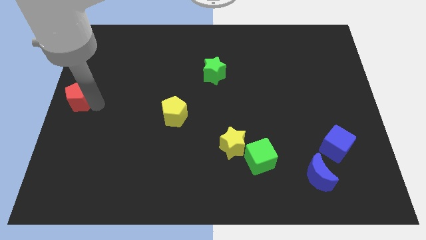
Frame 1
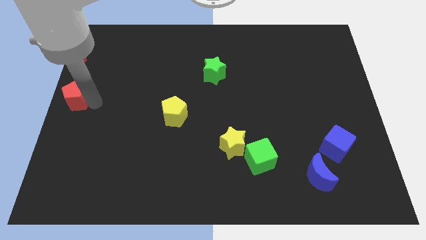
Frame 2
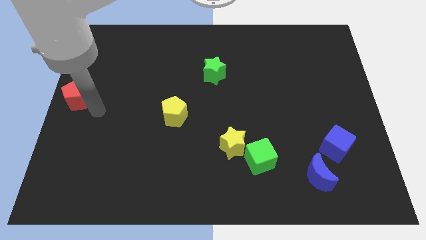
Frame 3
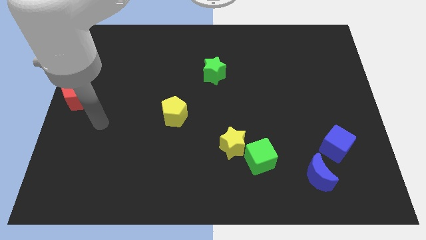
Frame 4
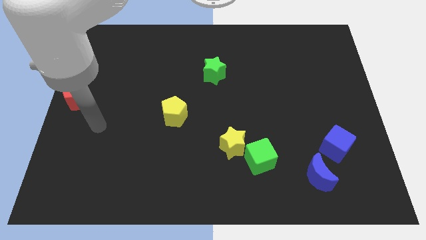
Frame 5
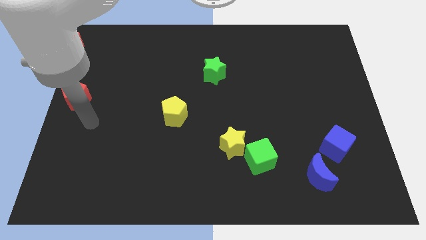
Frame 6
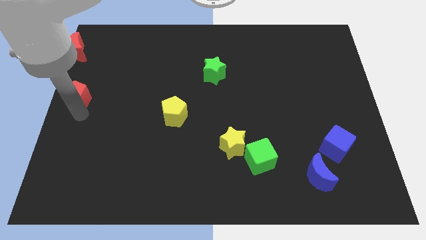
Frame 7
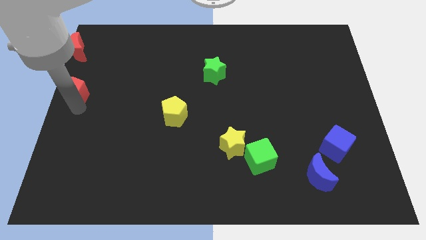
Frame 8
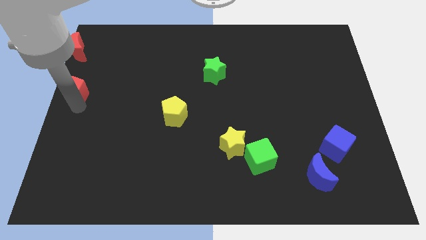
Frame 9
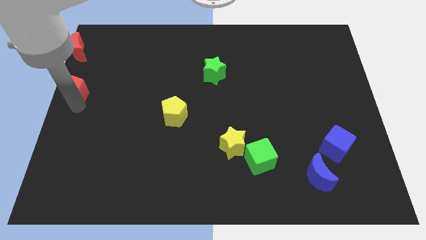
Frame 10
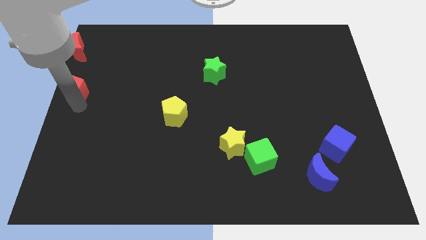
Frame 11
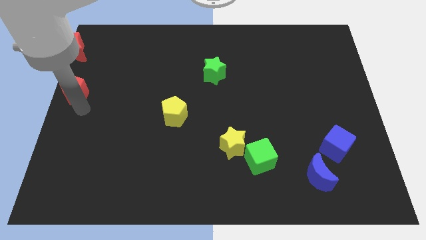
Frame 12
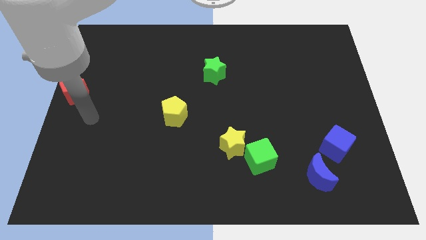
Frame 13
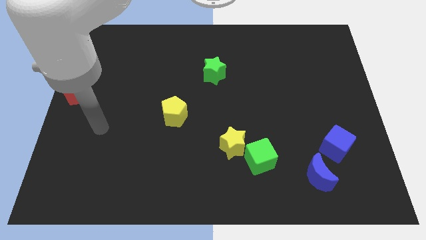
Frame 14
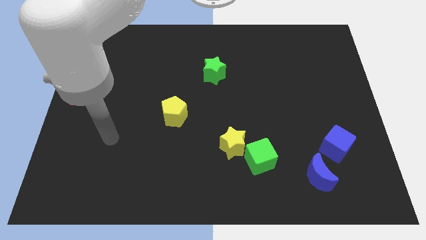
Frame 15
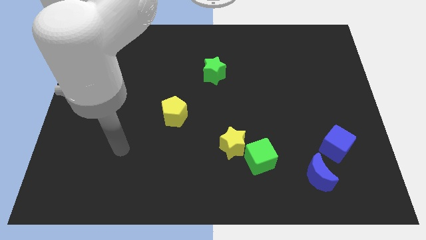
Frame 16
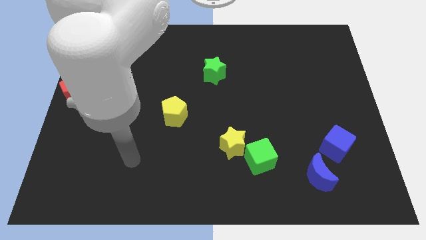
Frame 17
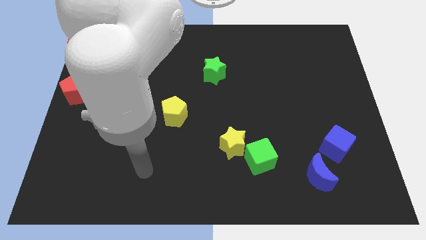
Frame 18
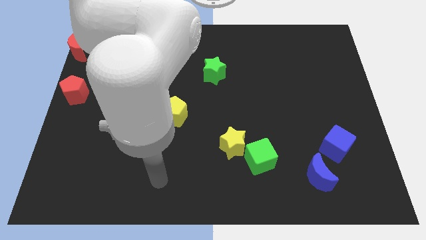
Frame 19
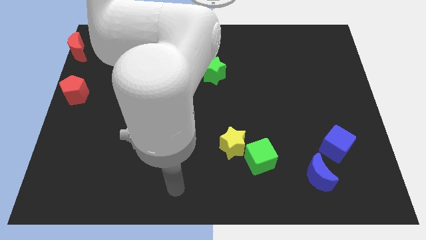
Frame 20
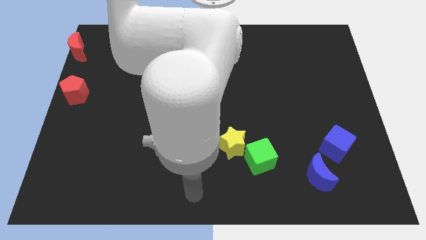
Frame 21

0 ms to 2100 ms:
put the red pentagon below the red moon

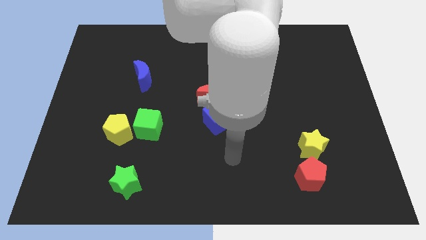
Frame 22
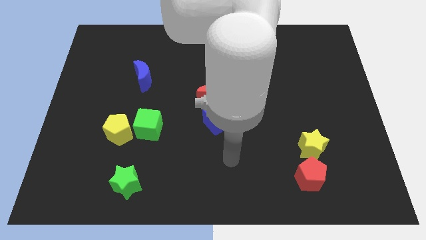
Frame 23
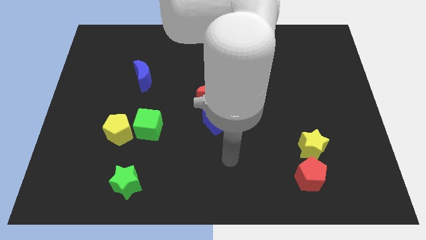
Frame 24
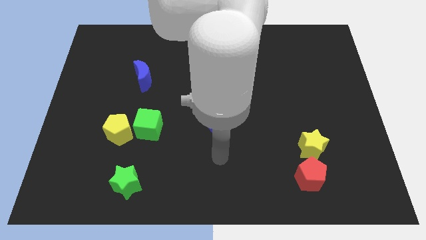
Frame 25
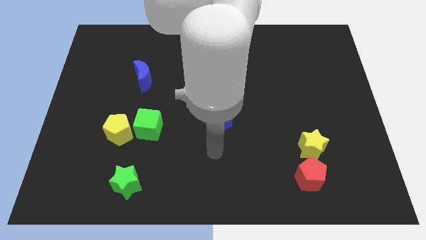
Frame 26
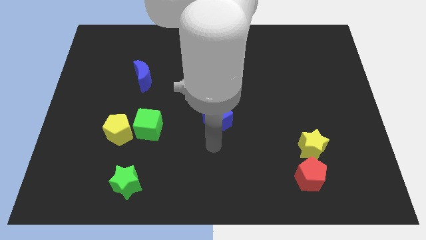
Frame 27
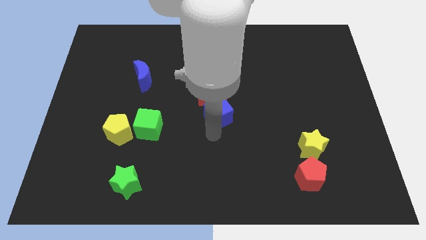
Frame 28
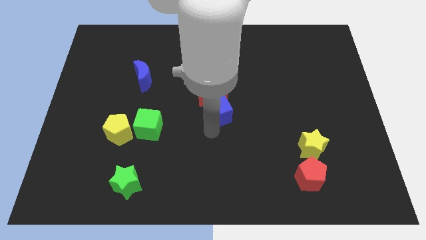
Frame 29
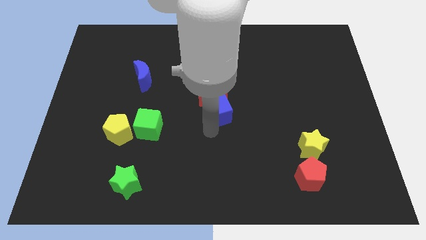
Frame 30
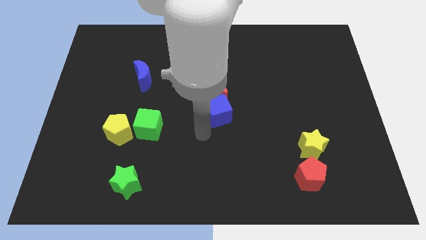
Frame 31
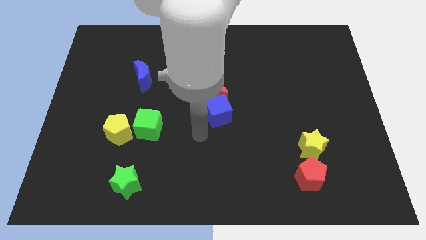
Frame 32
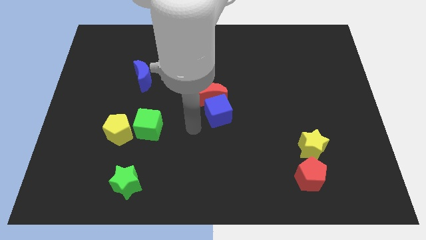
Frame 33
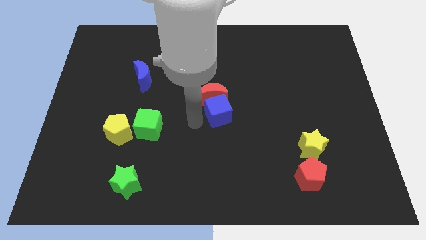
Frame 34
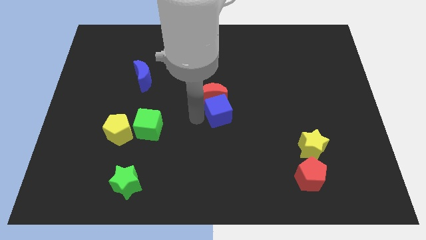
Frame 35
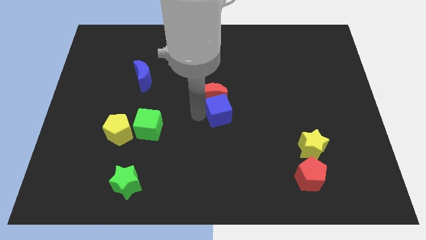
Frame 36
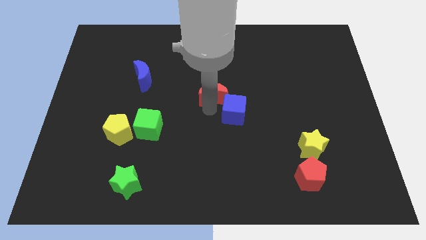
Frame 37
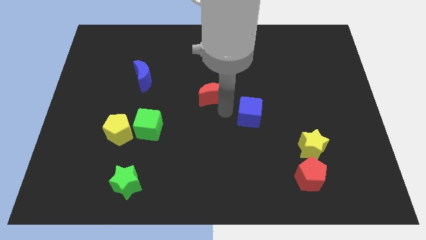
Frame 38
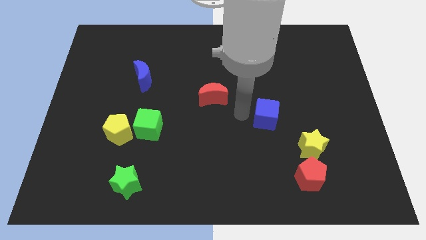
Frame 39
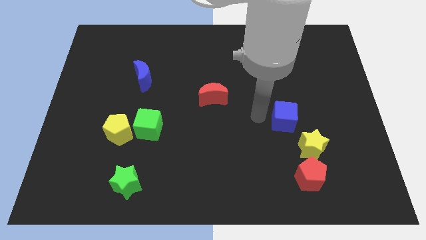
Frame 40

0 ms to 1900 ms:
push the blue cube away from the red moon

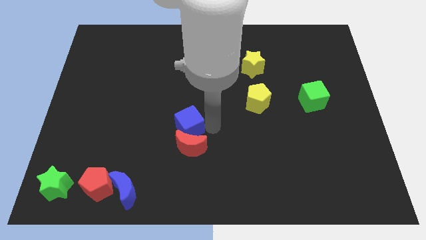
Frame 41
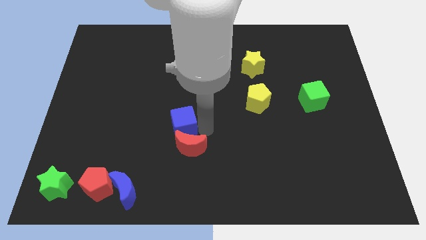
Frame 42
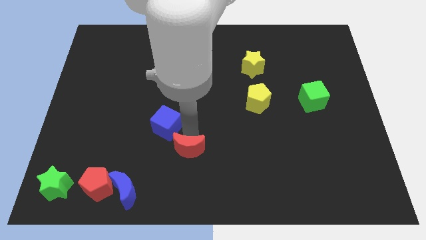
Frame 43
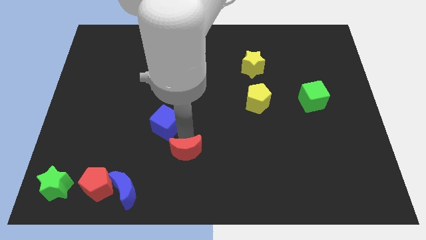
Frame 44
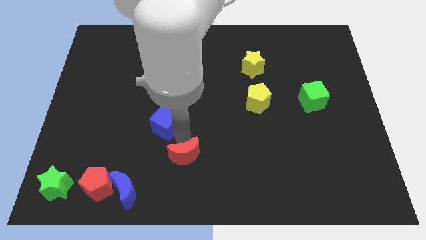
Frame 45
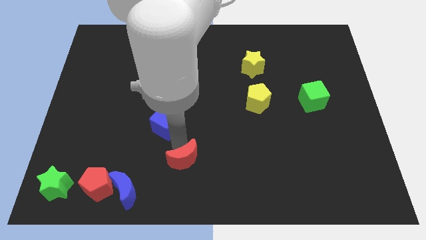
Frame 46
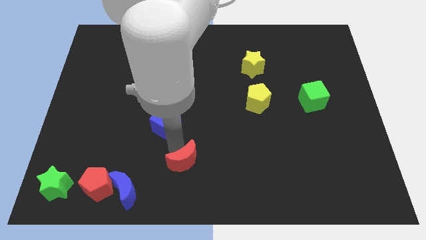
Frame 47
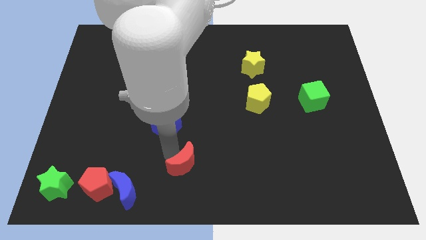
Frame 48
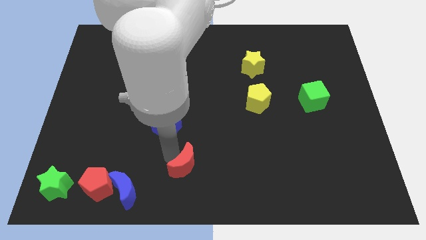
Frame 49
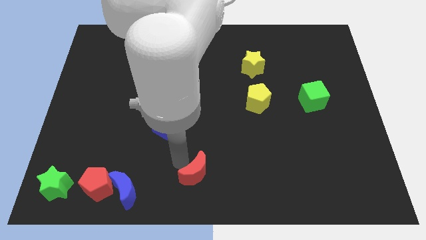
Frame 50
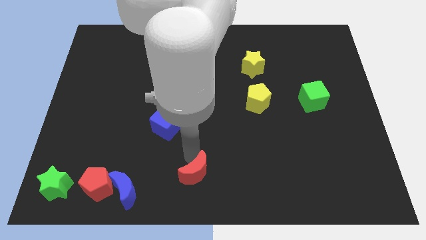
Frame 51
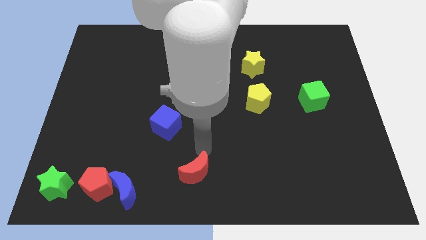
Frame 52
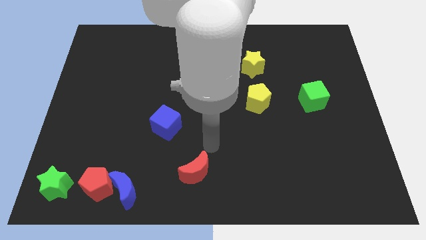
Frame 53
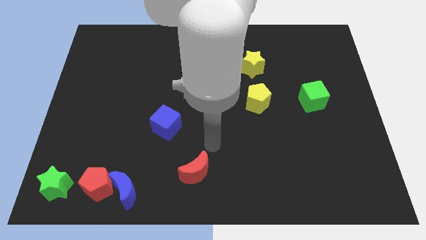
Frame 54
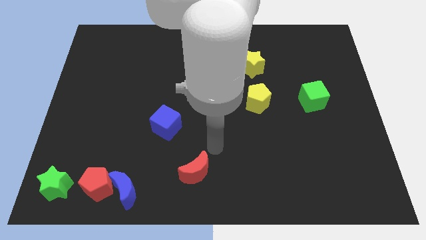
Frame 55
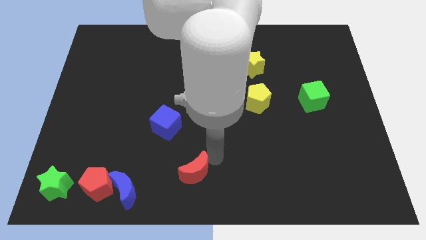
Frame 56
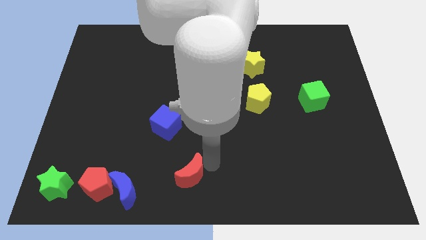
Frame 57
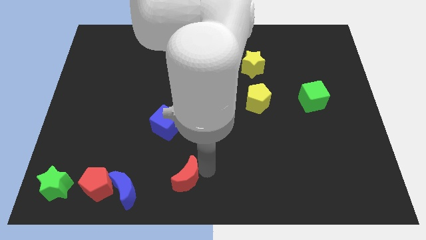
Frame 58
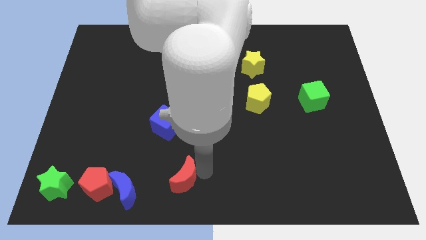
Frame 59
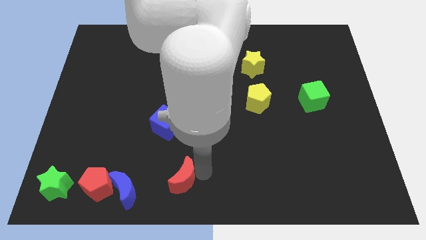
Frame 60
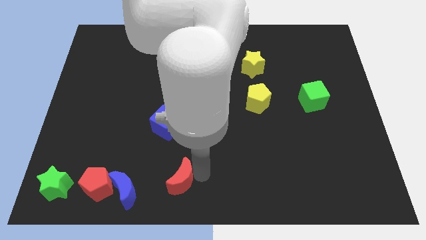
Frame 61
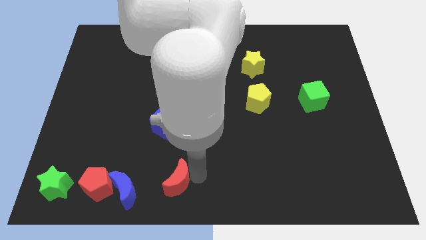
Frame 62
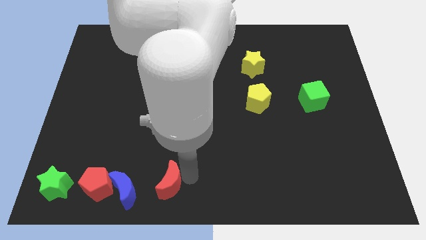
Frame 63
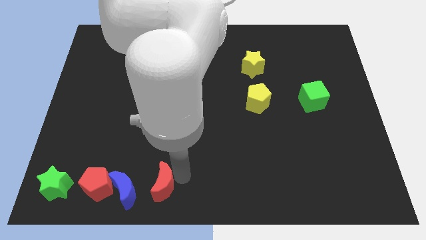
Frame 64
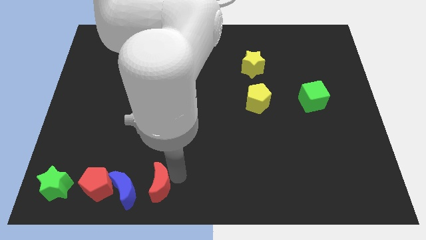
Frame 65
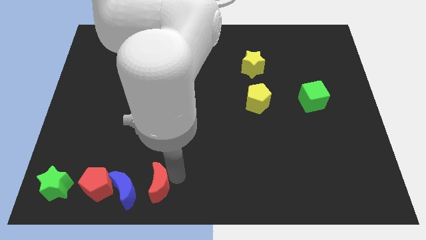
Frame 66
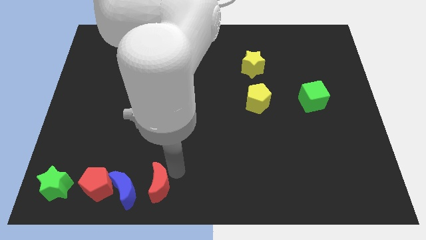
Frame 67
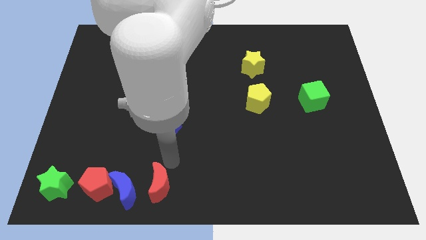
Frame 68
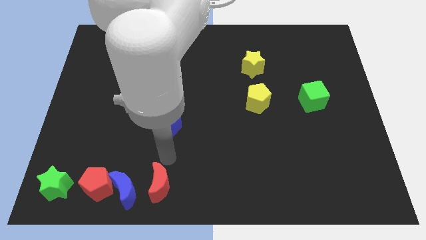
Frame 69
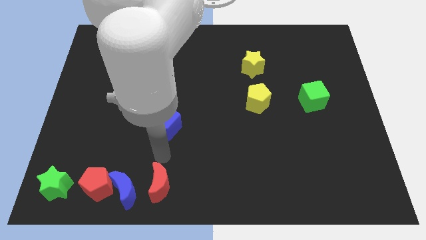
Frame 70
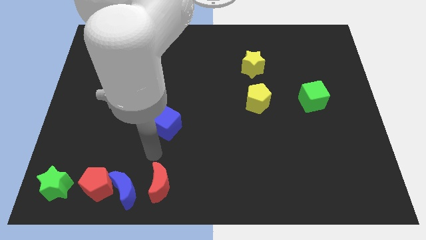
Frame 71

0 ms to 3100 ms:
push the red crescent right bottom center

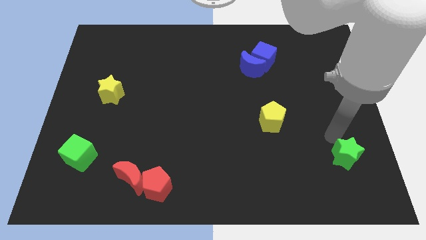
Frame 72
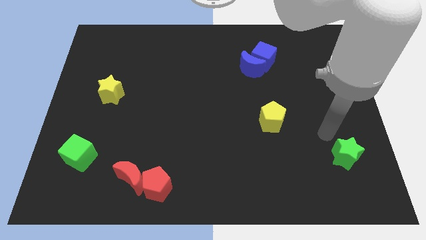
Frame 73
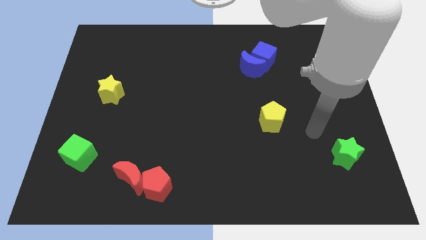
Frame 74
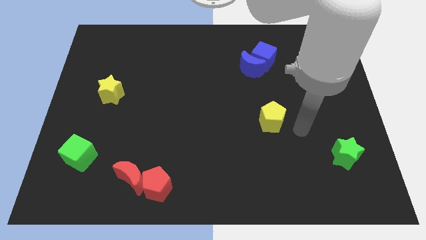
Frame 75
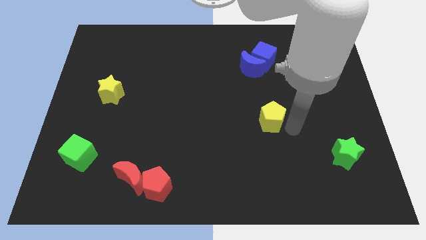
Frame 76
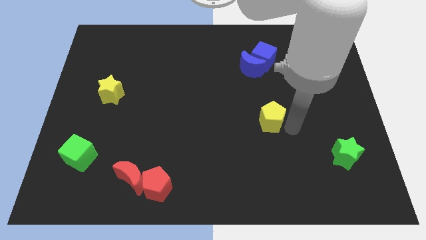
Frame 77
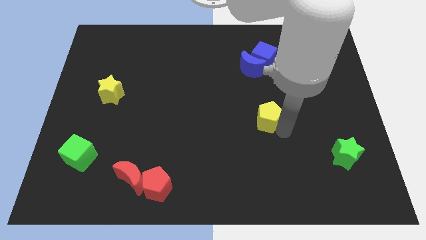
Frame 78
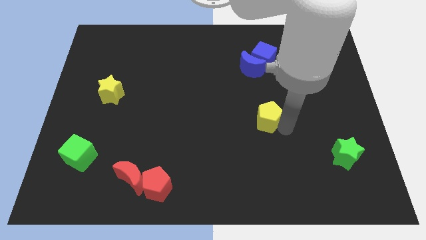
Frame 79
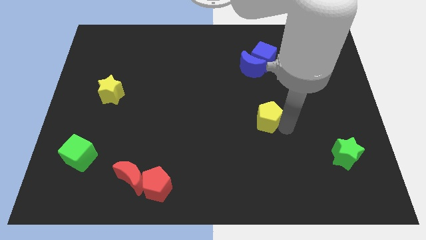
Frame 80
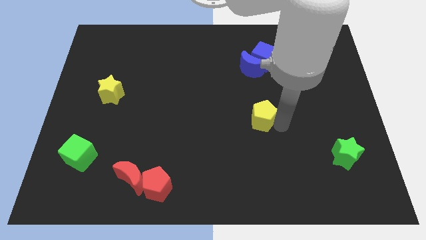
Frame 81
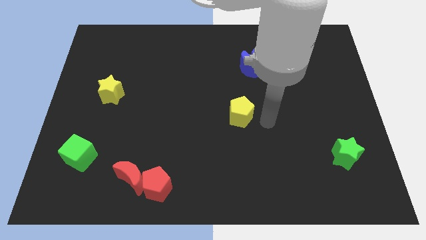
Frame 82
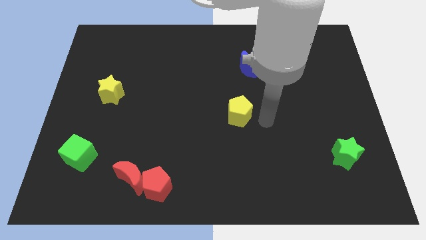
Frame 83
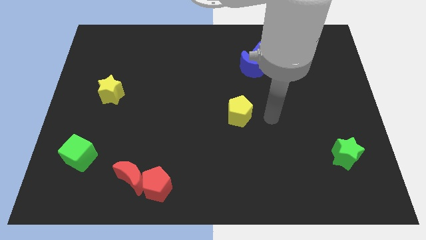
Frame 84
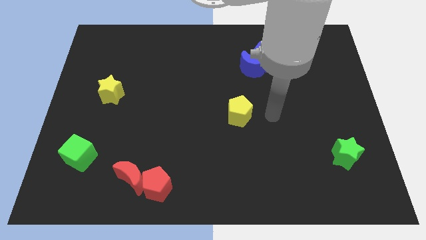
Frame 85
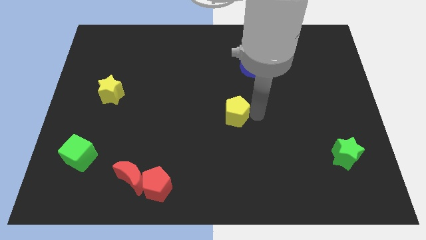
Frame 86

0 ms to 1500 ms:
move the yellow pentagon towards the left

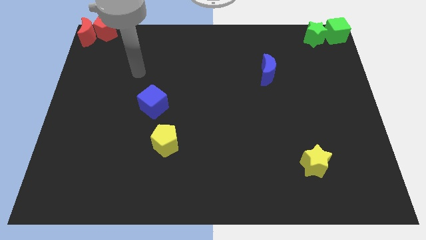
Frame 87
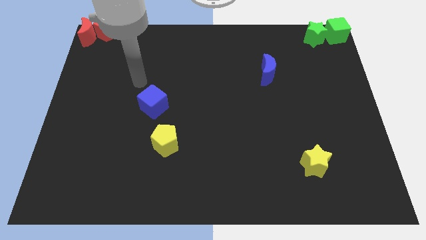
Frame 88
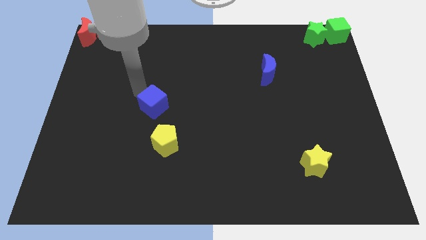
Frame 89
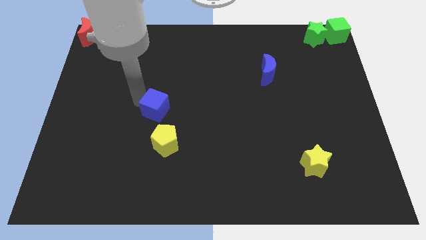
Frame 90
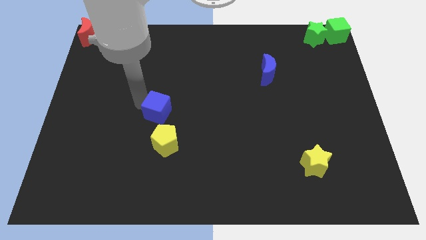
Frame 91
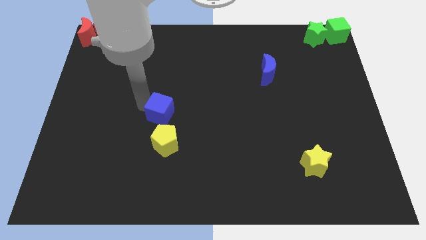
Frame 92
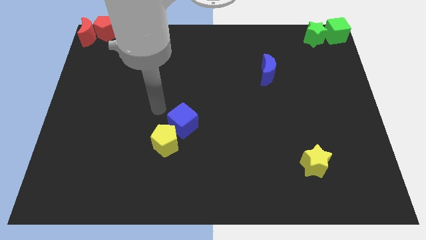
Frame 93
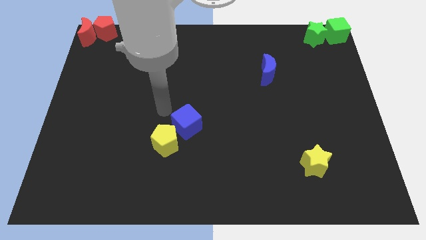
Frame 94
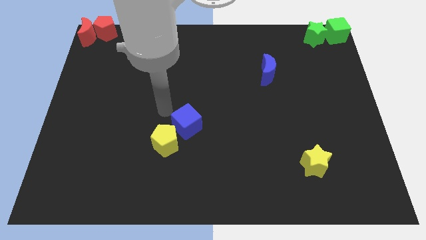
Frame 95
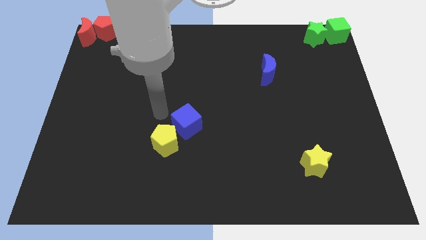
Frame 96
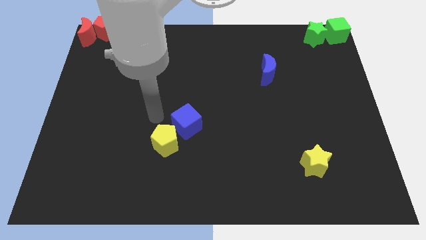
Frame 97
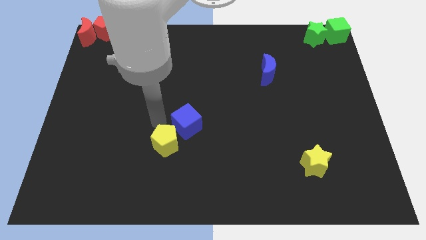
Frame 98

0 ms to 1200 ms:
move the blue cube to the top right of the yellow pentagon
